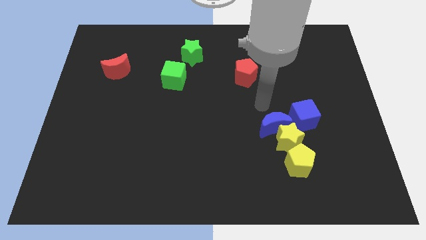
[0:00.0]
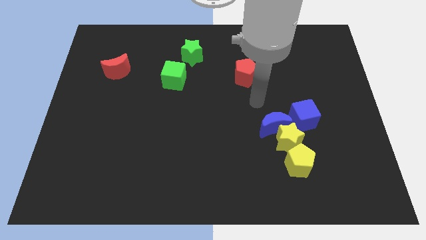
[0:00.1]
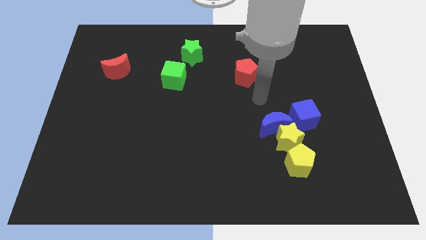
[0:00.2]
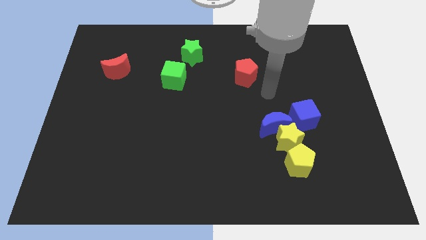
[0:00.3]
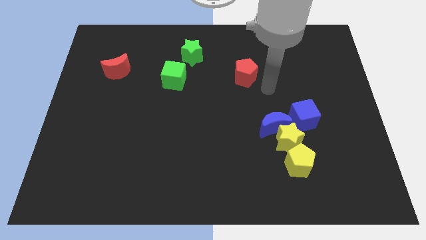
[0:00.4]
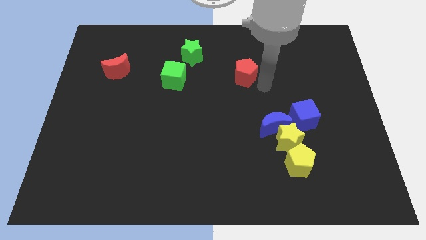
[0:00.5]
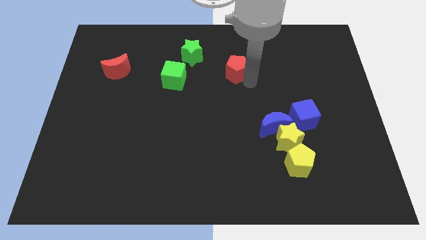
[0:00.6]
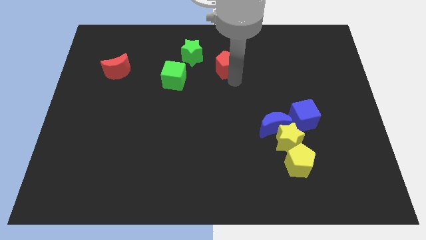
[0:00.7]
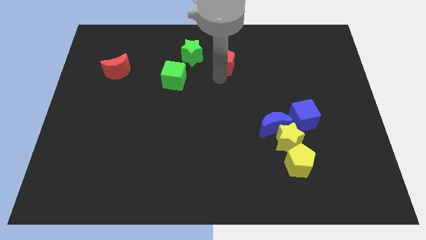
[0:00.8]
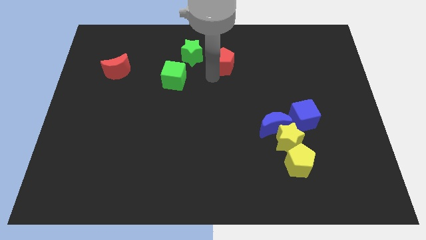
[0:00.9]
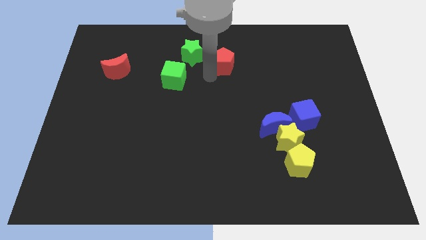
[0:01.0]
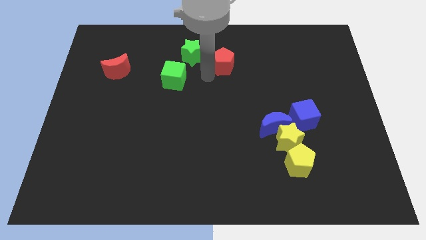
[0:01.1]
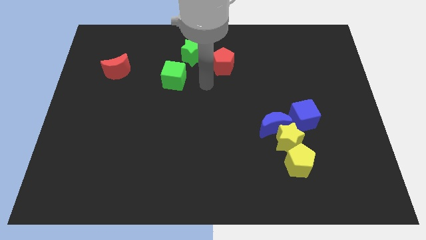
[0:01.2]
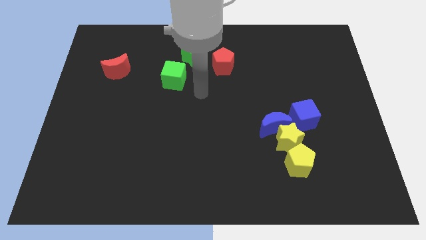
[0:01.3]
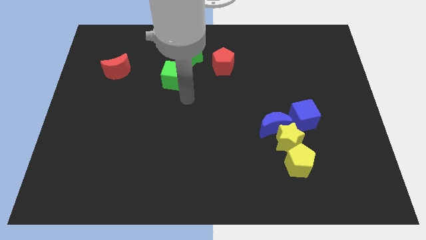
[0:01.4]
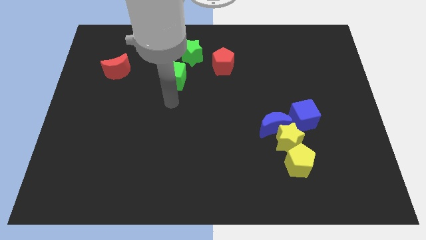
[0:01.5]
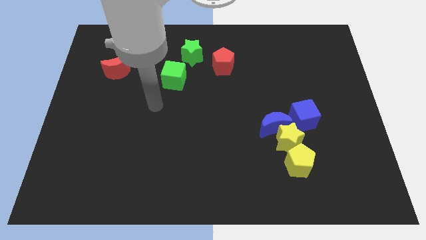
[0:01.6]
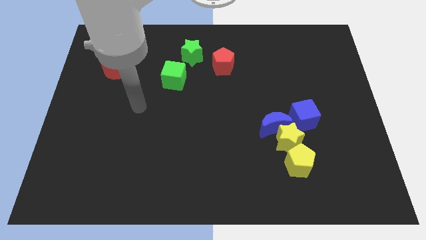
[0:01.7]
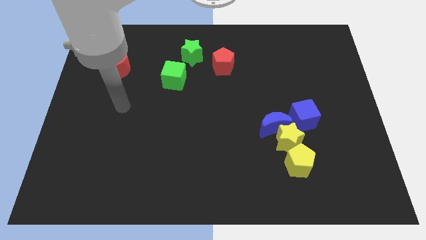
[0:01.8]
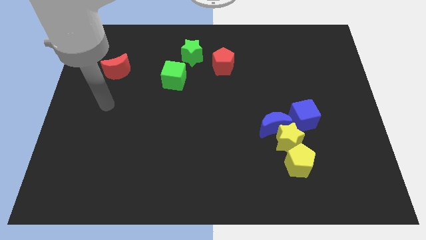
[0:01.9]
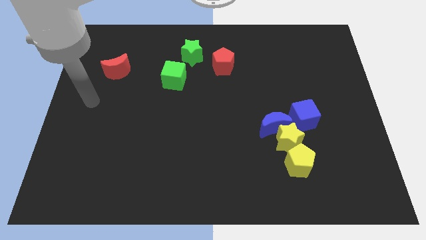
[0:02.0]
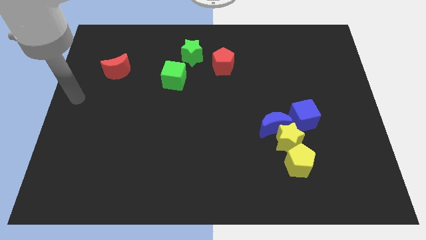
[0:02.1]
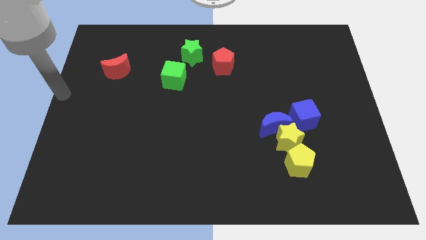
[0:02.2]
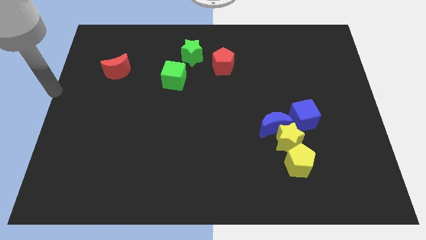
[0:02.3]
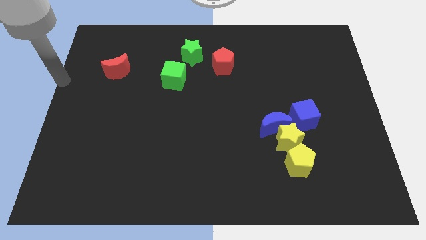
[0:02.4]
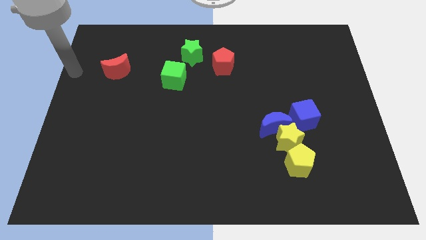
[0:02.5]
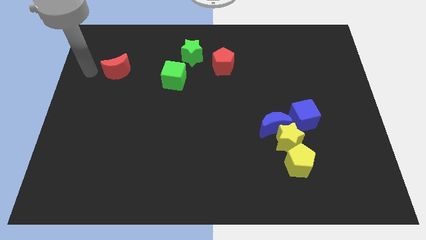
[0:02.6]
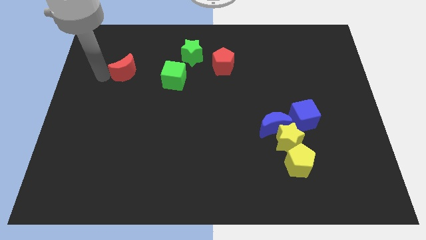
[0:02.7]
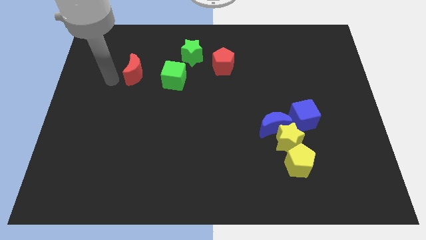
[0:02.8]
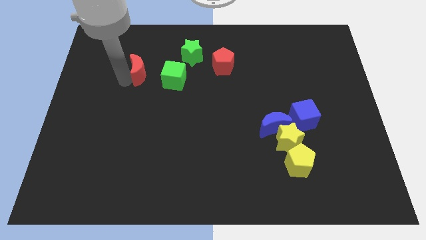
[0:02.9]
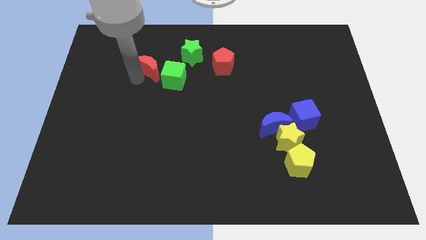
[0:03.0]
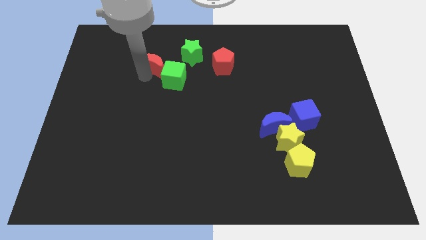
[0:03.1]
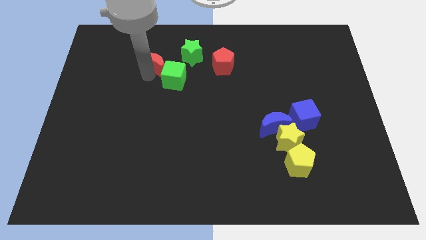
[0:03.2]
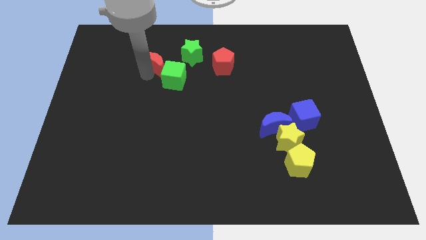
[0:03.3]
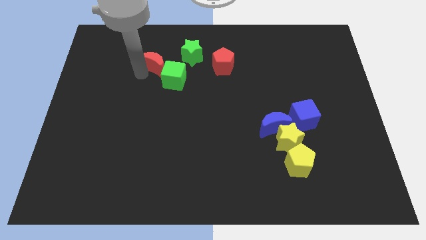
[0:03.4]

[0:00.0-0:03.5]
move the red pentagon and red crescent close to the green blocks

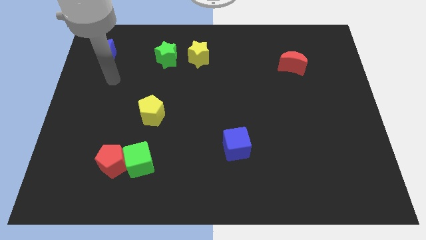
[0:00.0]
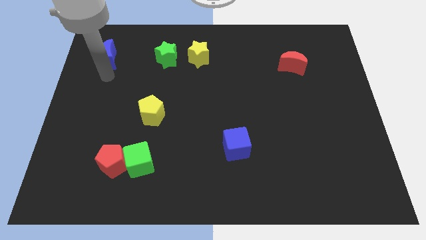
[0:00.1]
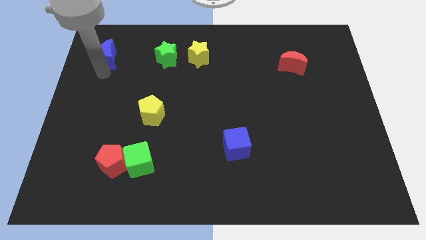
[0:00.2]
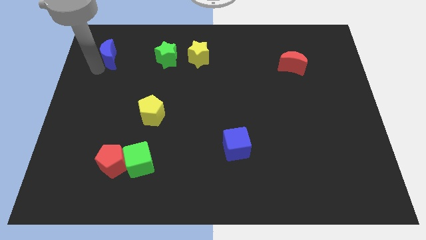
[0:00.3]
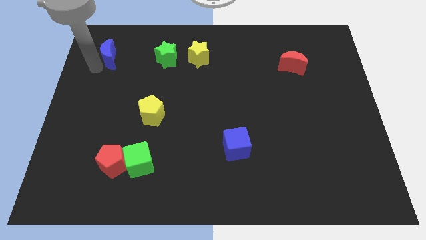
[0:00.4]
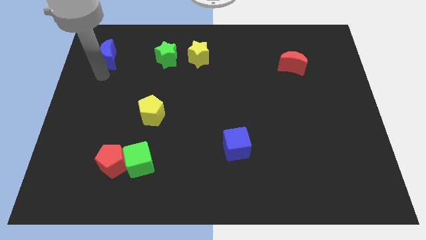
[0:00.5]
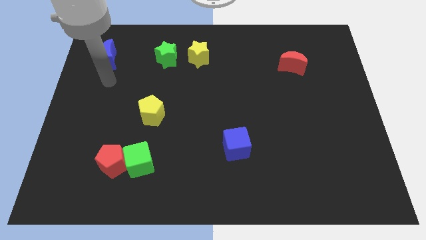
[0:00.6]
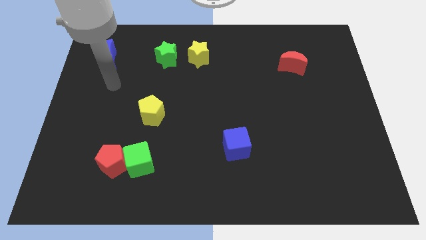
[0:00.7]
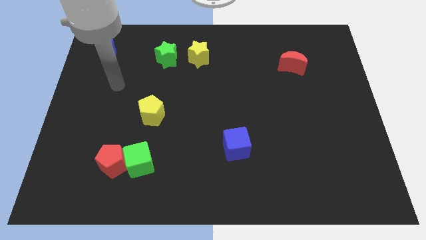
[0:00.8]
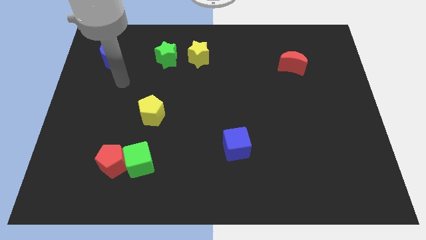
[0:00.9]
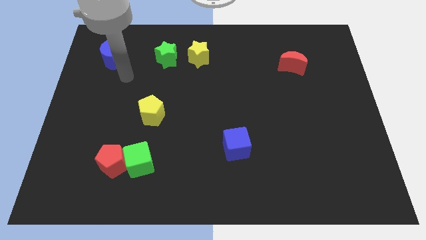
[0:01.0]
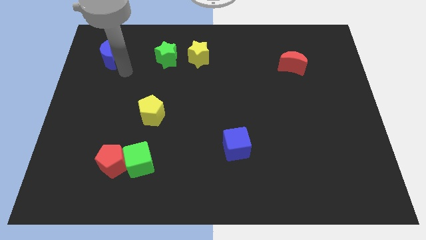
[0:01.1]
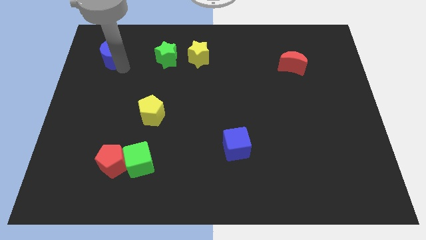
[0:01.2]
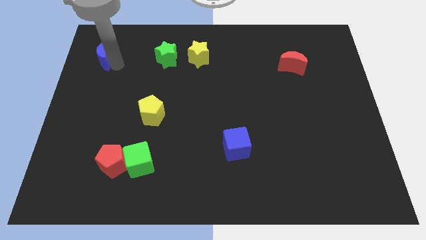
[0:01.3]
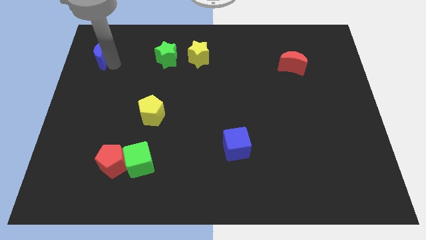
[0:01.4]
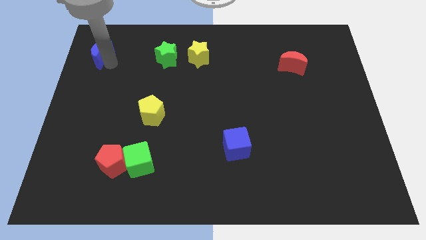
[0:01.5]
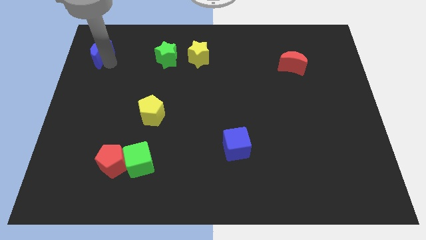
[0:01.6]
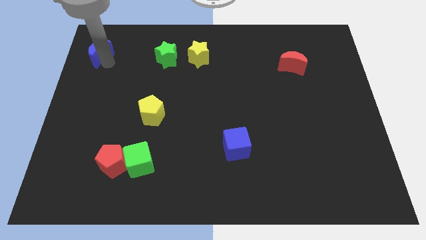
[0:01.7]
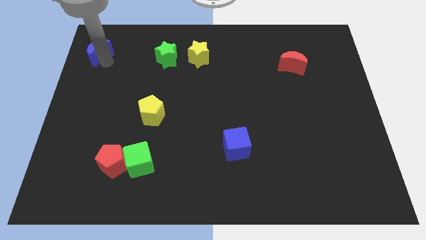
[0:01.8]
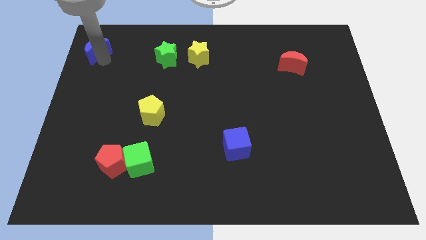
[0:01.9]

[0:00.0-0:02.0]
push the blue crescent towards the top left corner of the board

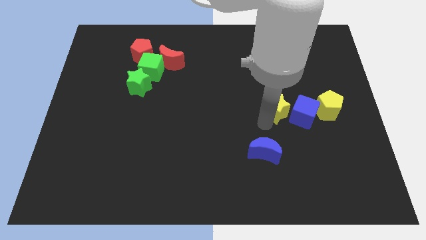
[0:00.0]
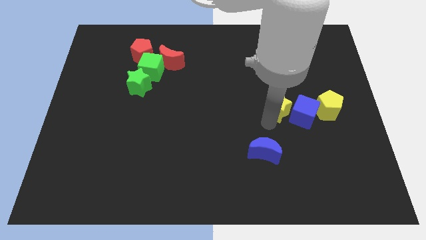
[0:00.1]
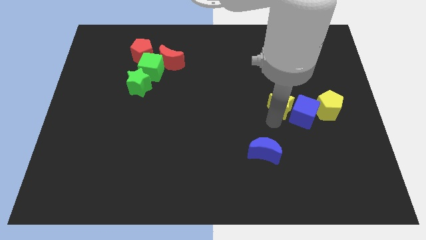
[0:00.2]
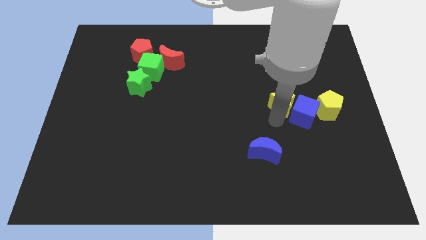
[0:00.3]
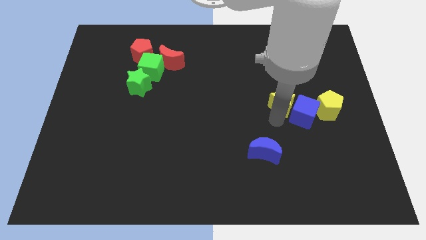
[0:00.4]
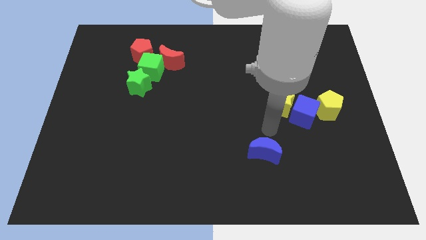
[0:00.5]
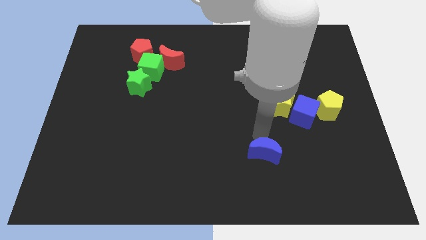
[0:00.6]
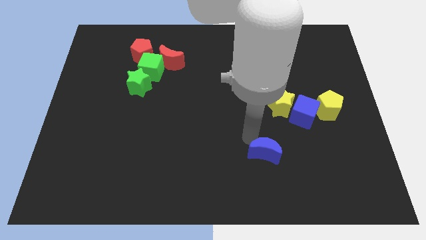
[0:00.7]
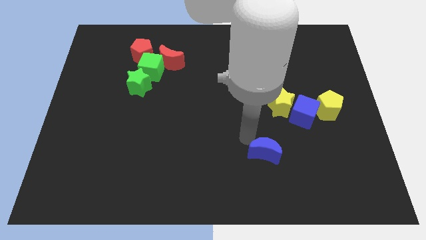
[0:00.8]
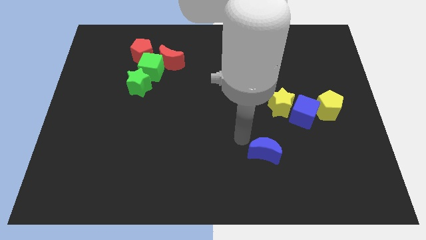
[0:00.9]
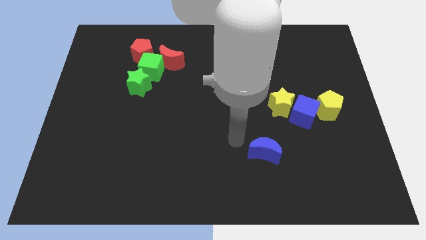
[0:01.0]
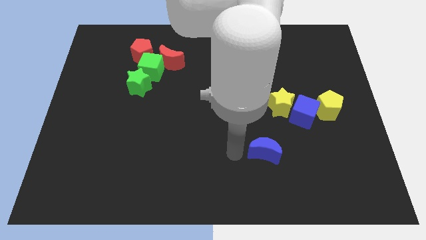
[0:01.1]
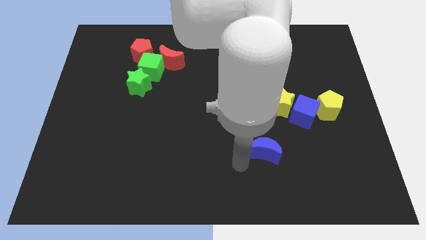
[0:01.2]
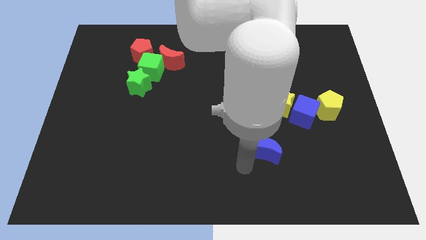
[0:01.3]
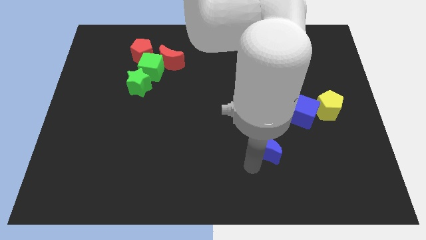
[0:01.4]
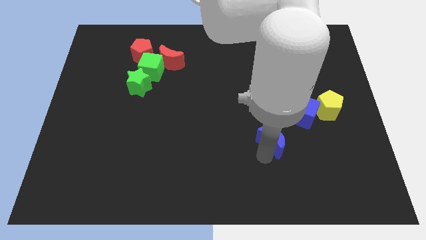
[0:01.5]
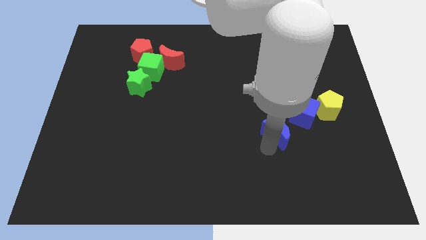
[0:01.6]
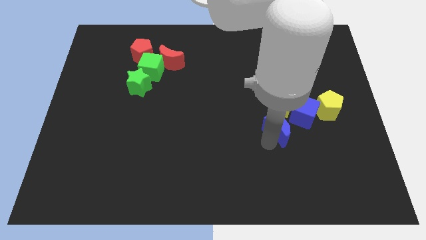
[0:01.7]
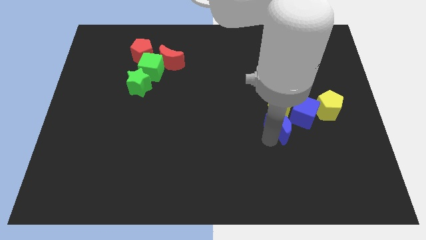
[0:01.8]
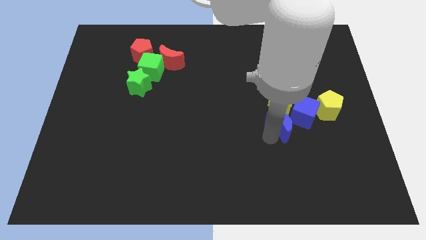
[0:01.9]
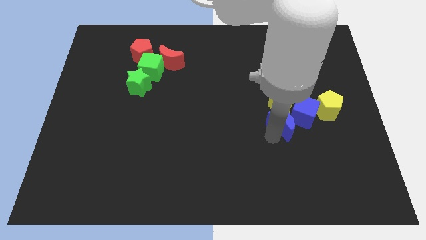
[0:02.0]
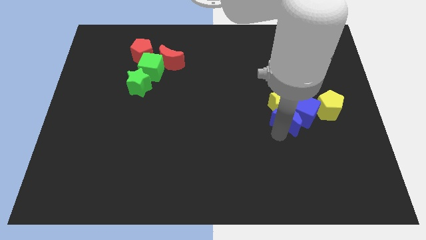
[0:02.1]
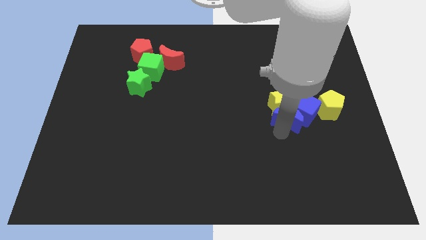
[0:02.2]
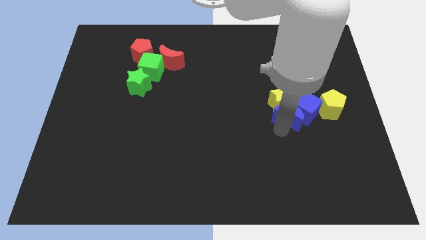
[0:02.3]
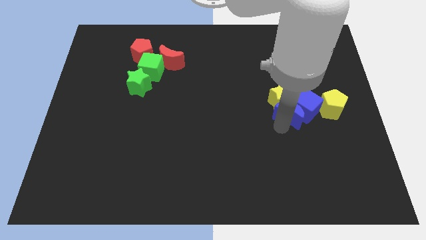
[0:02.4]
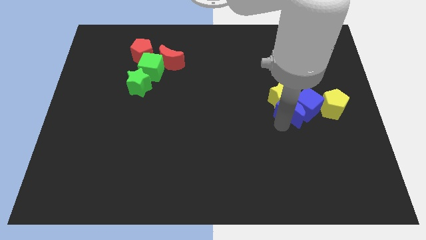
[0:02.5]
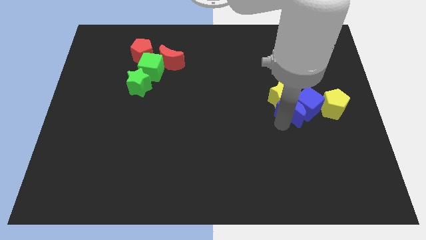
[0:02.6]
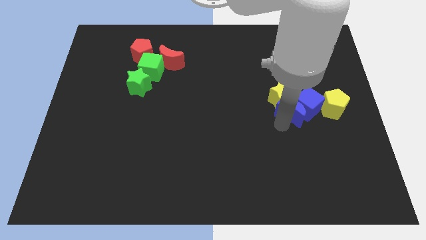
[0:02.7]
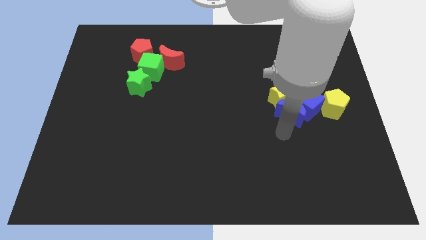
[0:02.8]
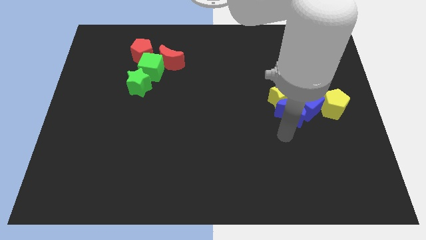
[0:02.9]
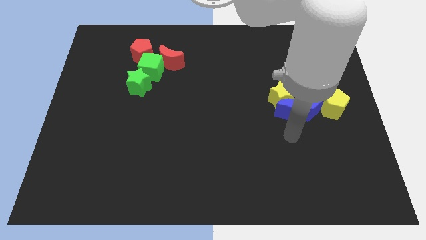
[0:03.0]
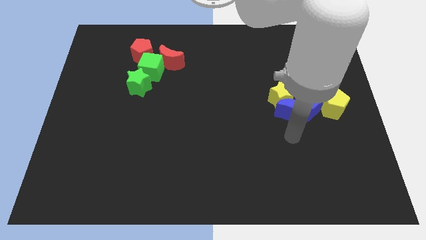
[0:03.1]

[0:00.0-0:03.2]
push the blue moon into the blue cube

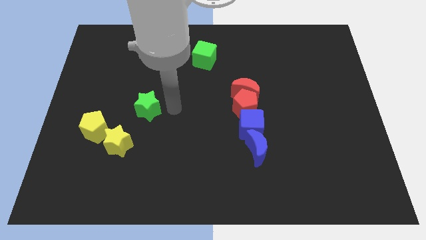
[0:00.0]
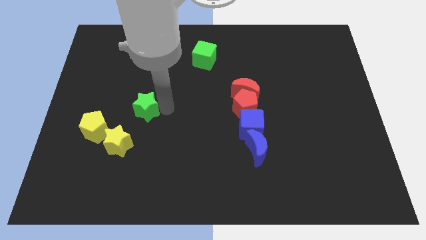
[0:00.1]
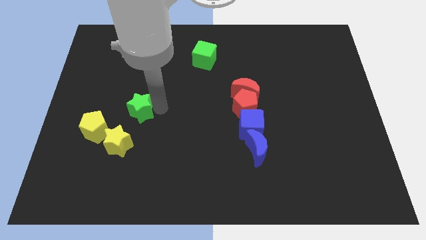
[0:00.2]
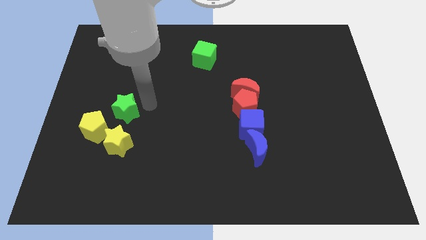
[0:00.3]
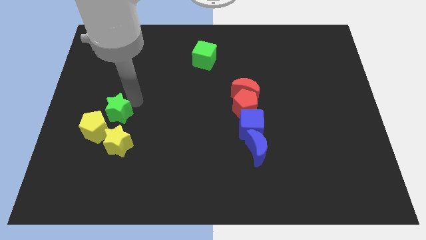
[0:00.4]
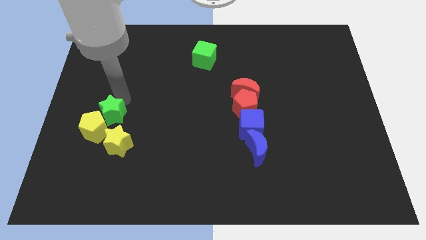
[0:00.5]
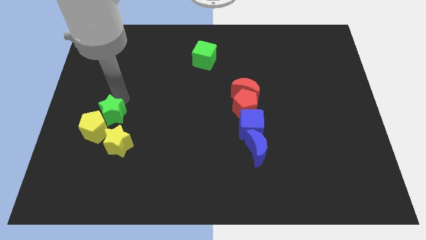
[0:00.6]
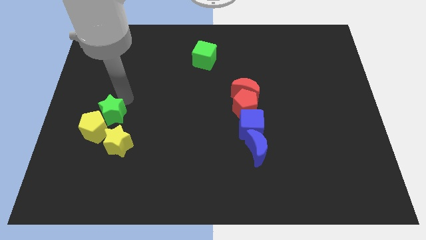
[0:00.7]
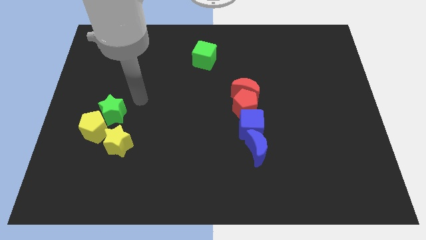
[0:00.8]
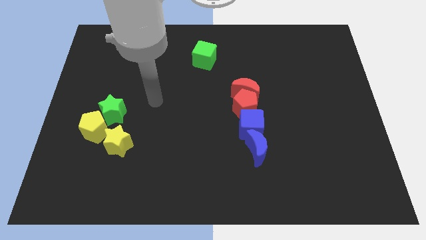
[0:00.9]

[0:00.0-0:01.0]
make the green star to touch the top side of the yellow pentagon
